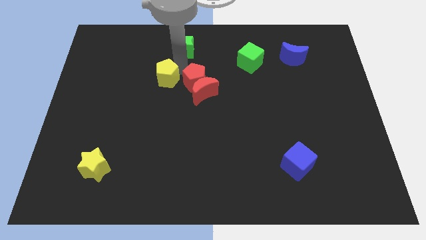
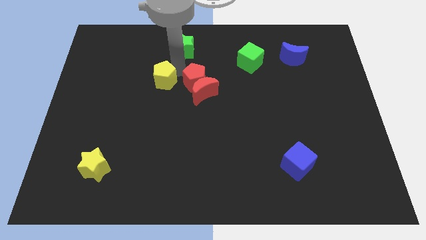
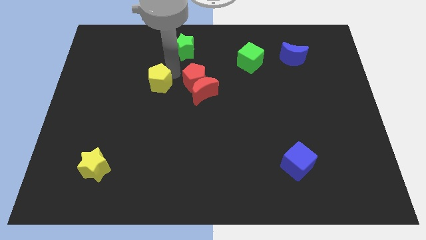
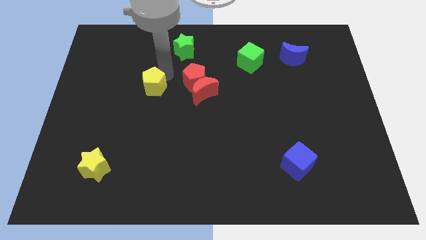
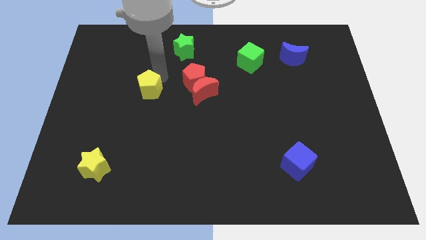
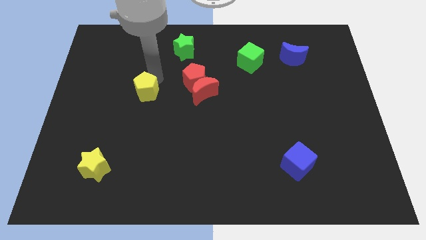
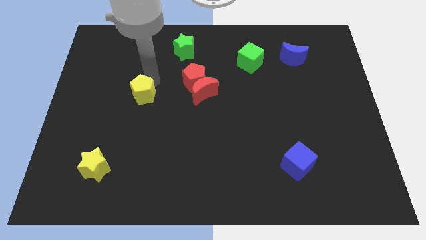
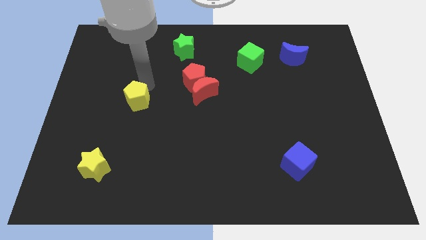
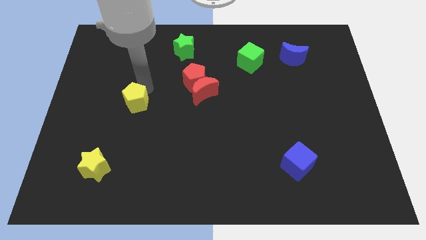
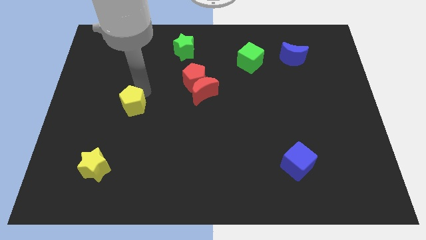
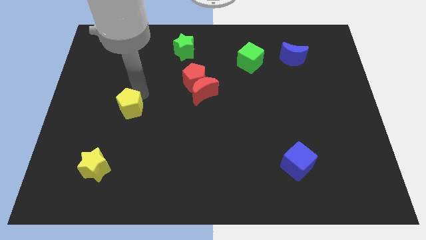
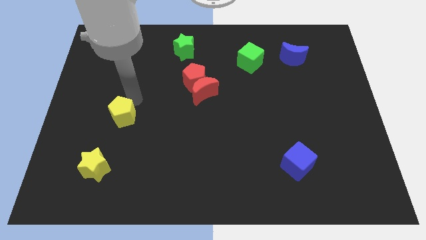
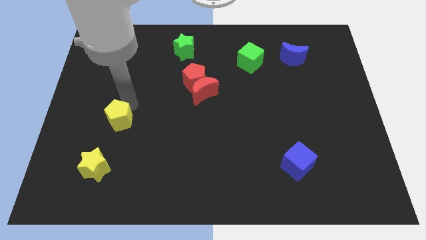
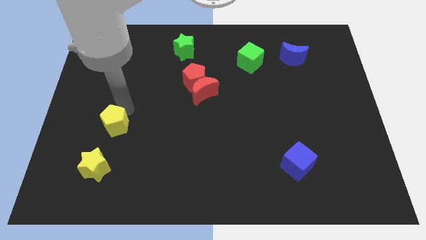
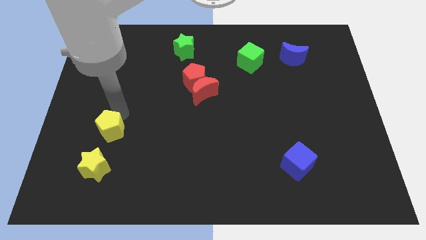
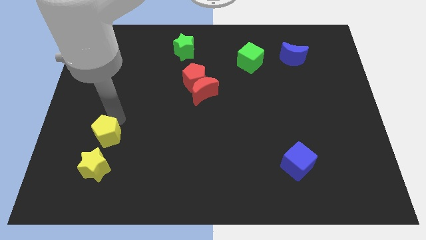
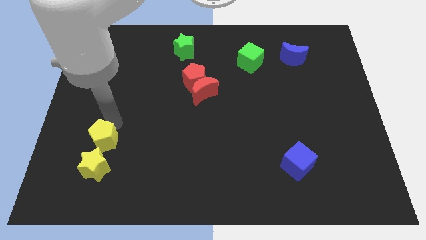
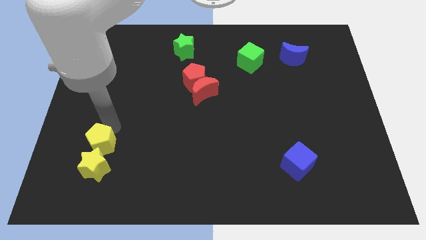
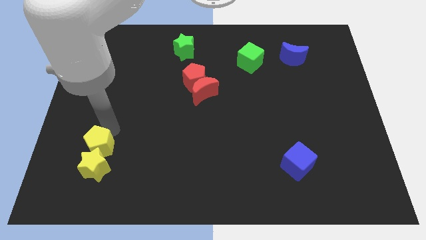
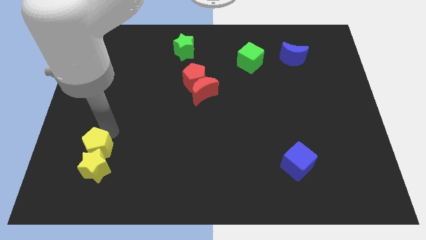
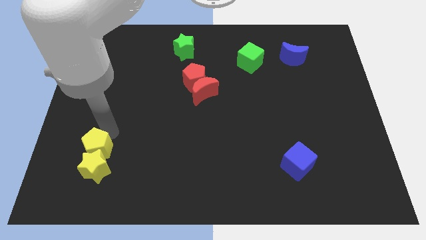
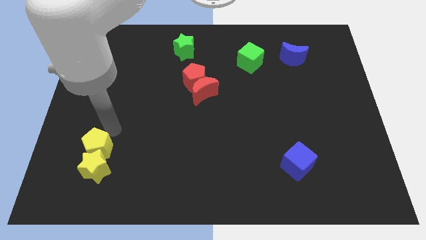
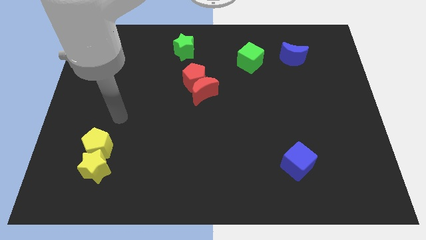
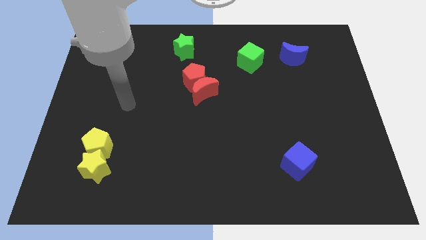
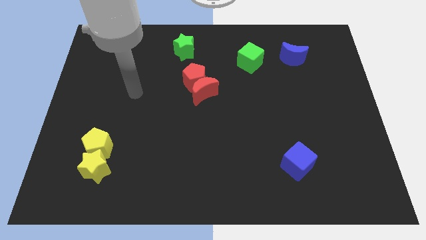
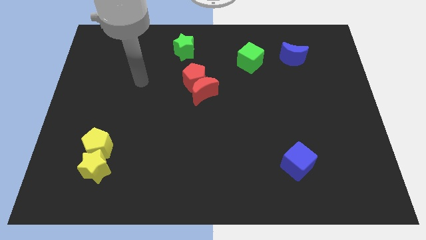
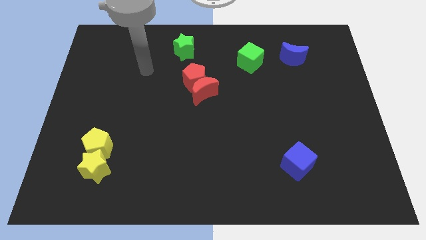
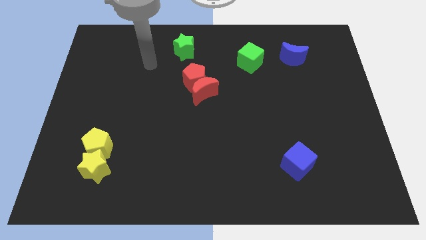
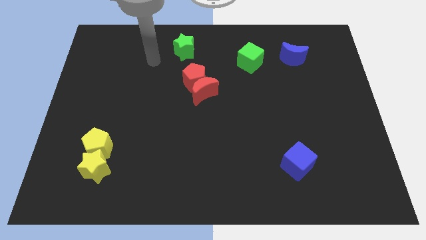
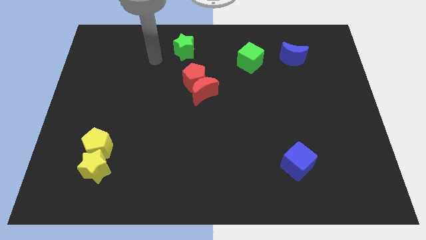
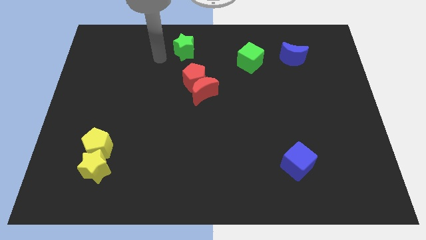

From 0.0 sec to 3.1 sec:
push the yellow pentagon into the yellow star

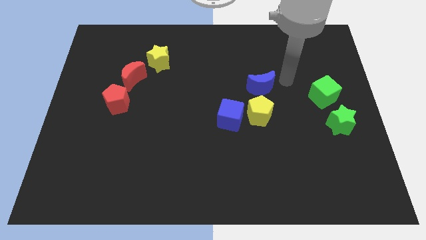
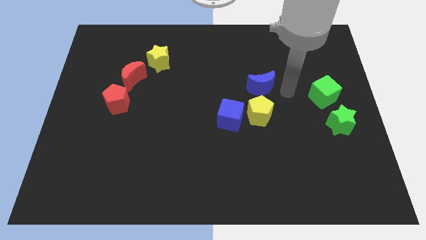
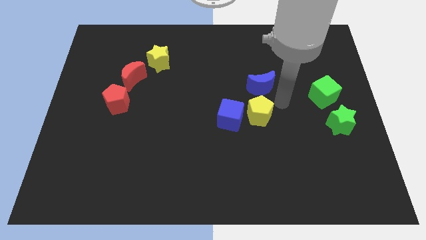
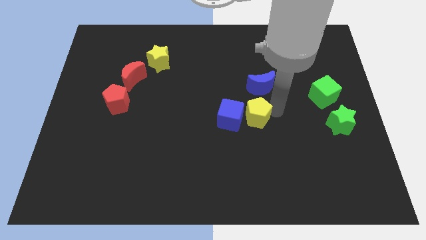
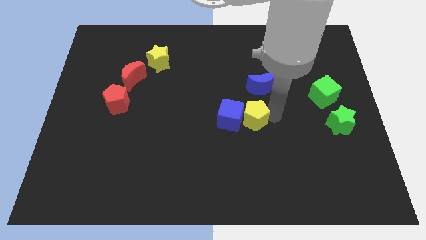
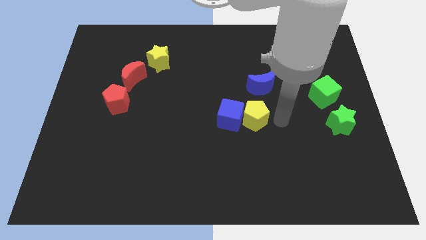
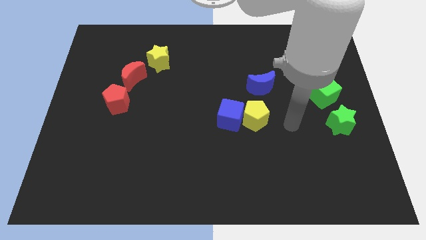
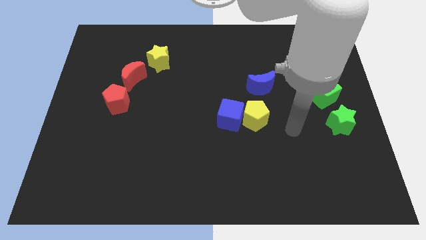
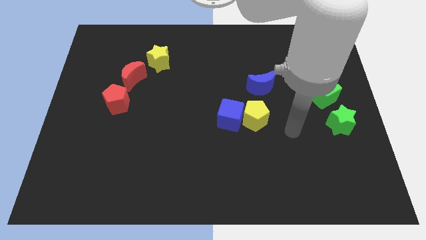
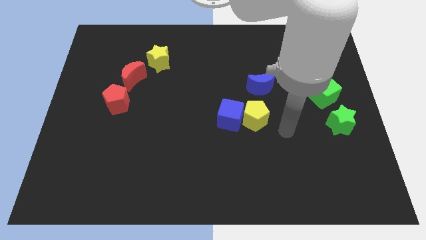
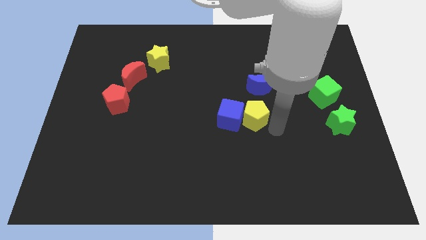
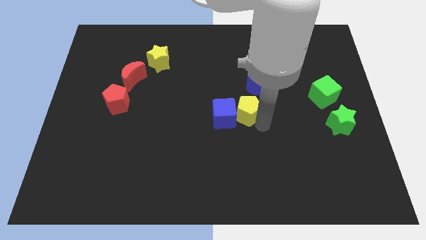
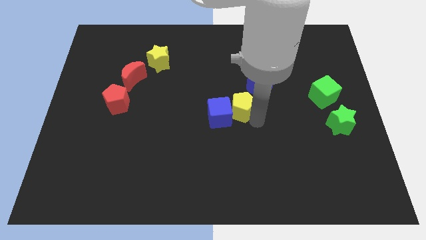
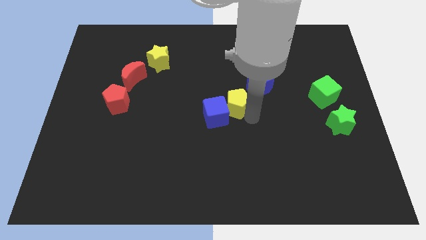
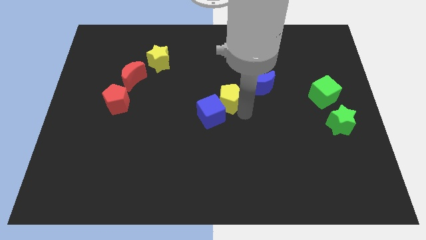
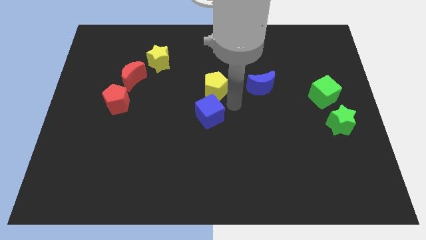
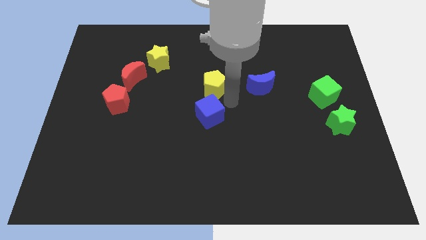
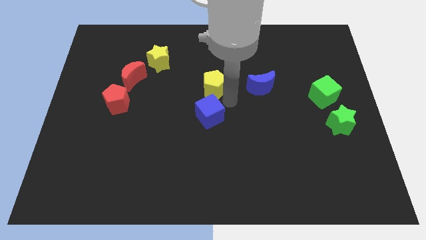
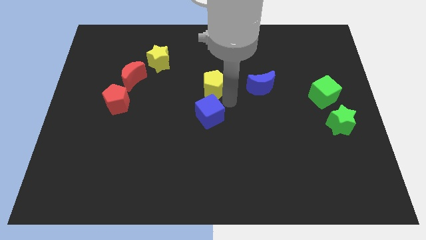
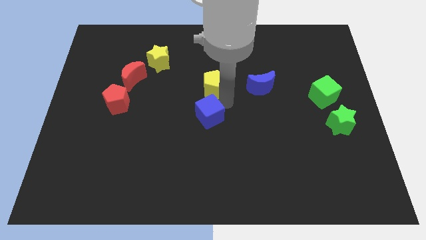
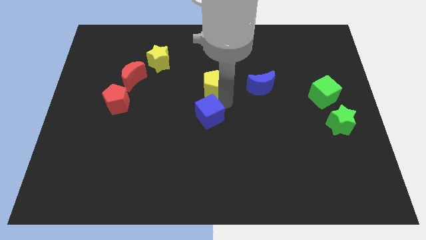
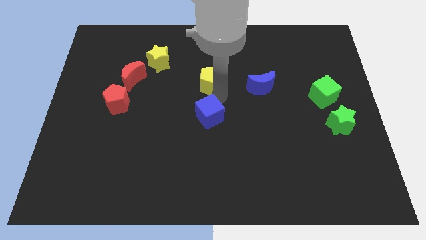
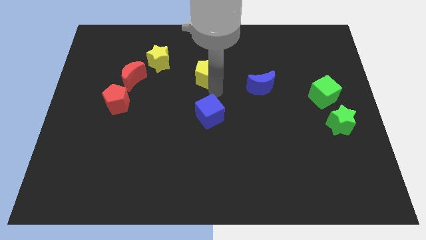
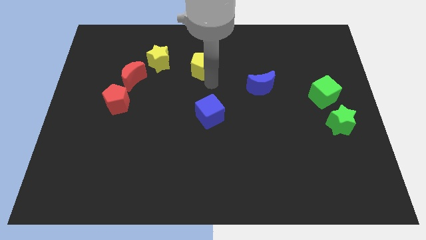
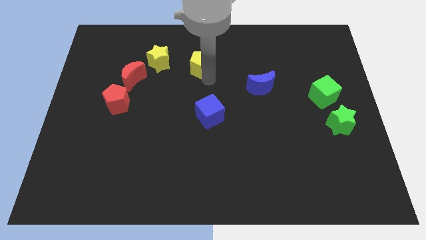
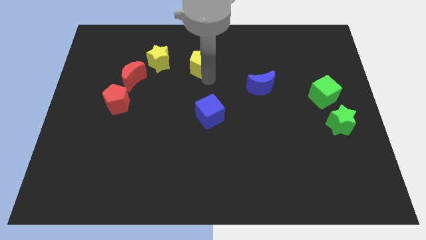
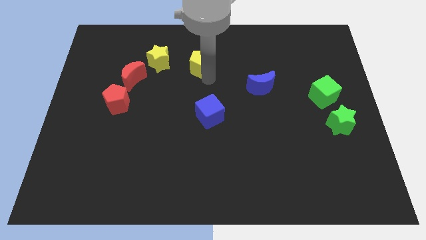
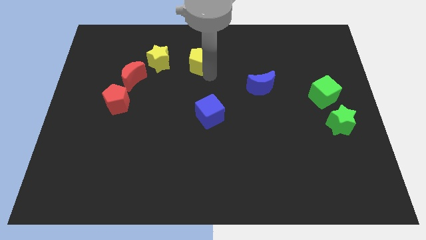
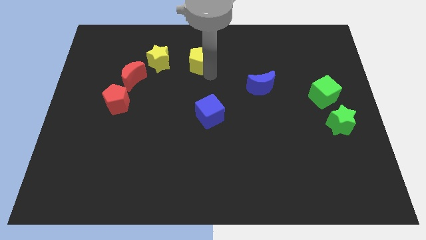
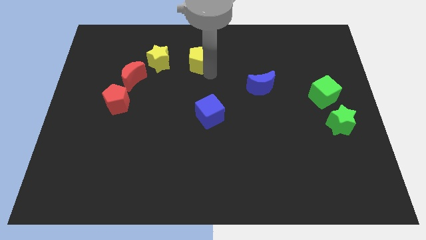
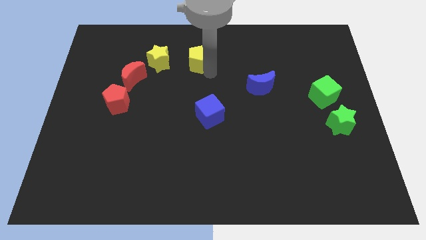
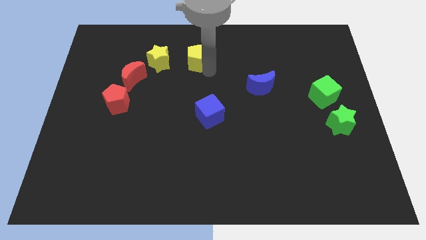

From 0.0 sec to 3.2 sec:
place the yellow pentagon right to the yellow star

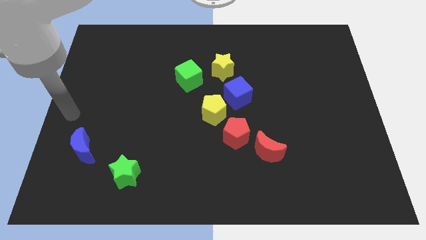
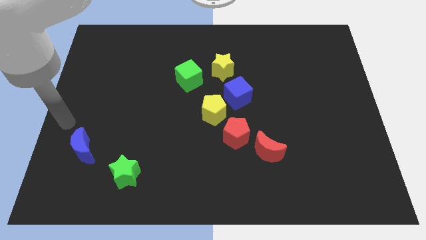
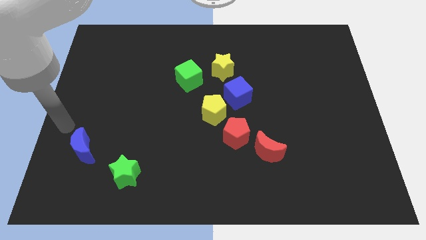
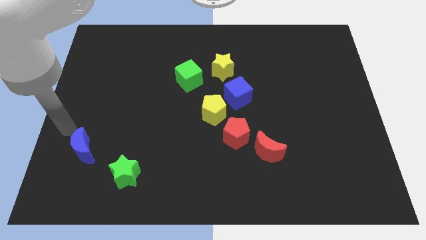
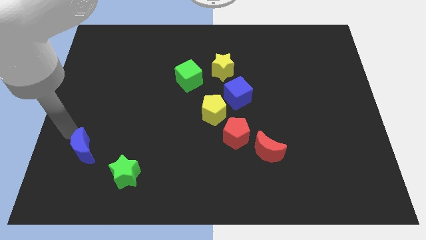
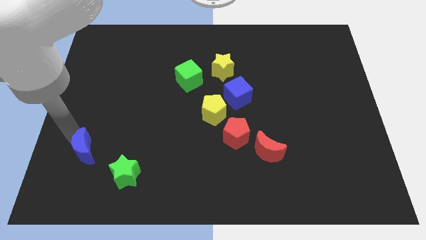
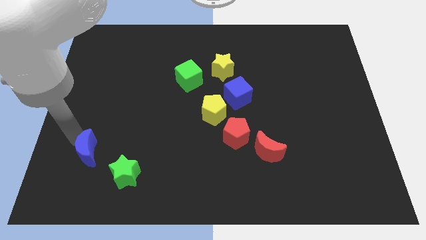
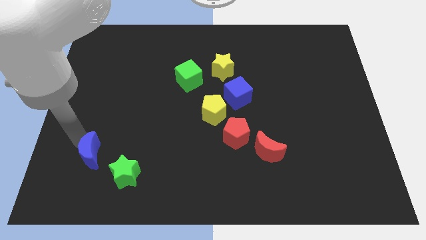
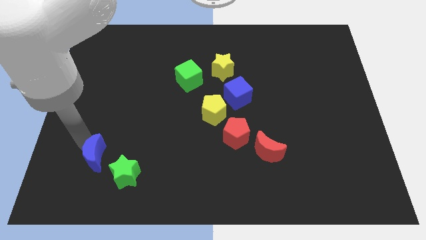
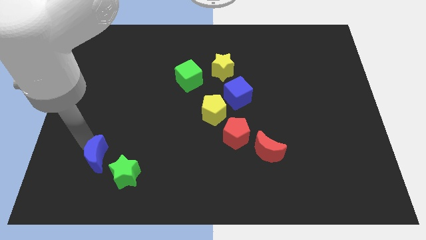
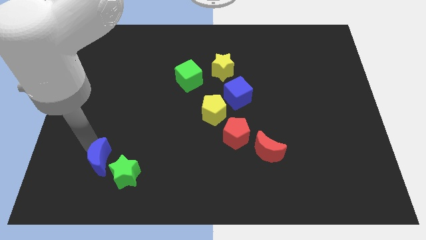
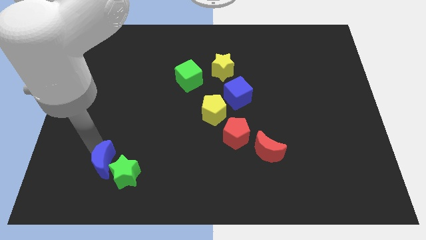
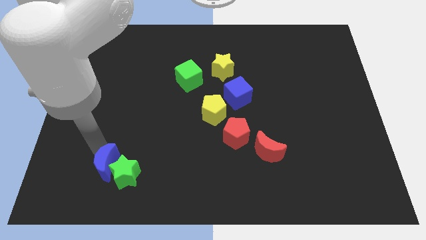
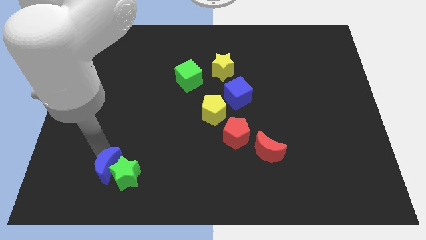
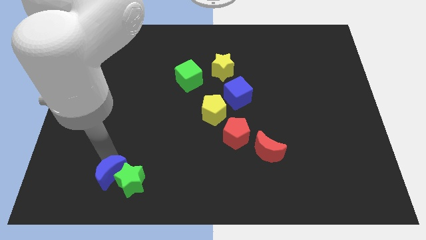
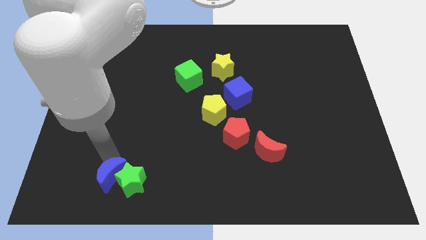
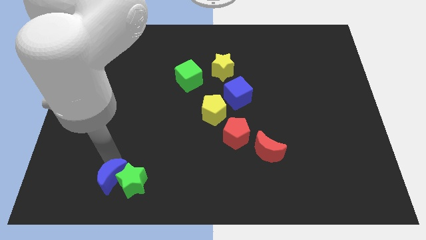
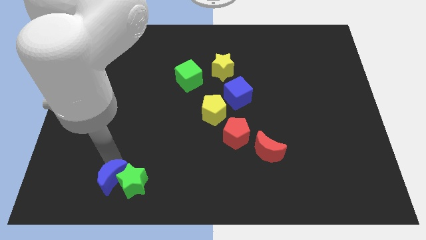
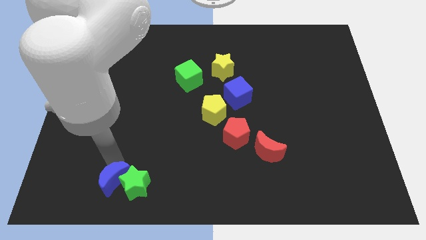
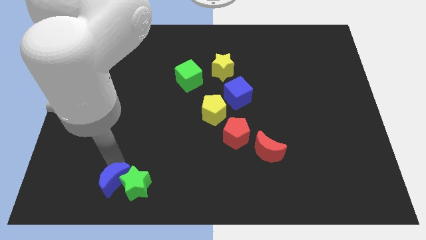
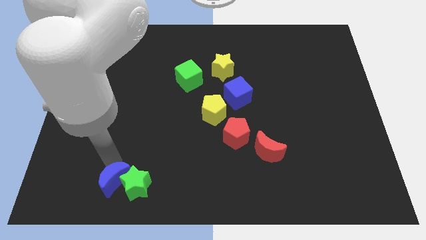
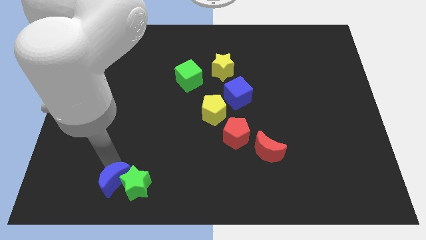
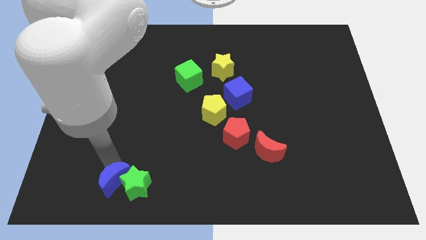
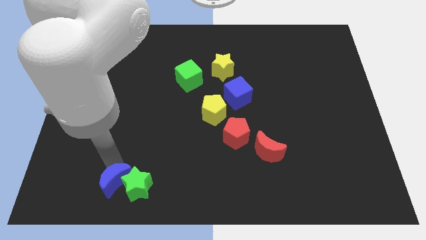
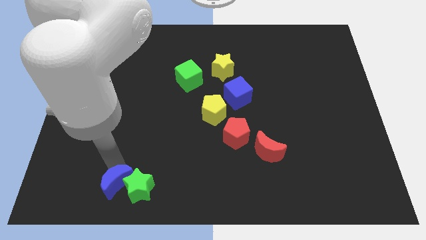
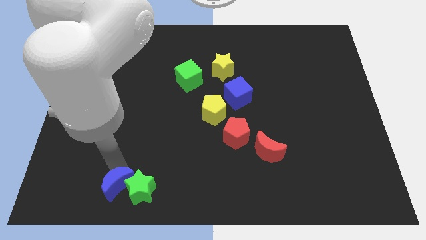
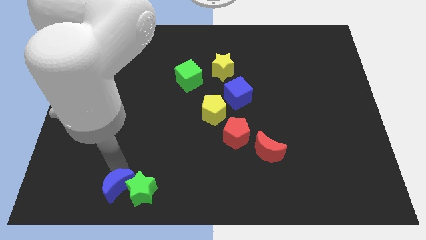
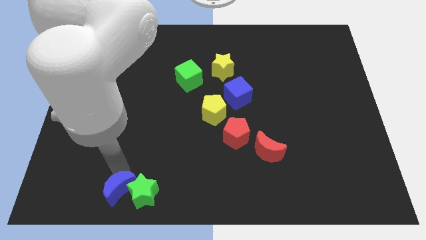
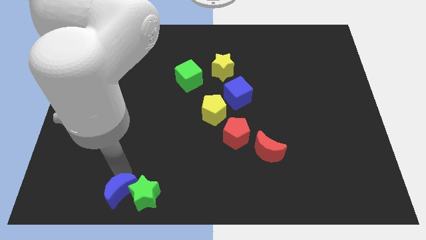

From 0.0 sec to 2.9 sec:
push blue moon in to green star
